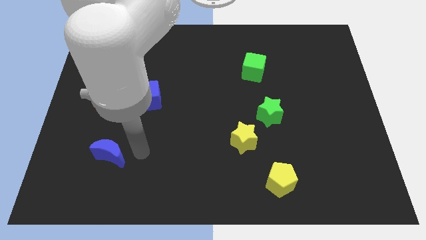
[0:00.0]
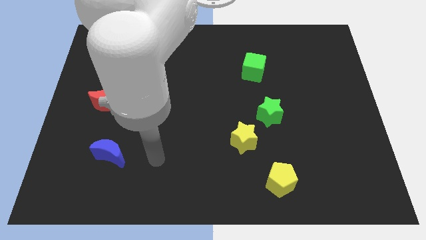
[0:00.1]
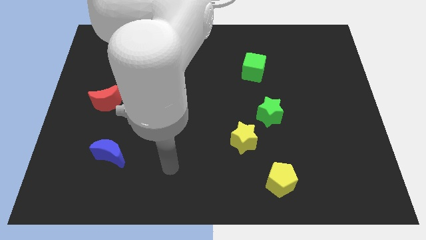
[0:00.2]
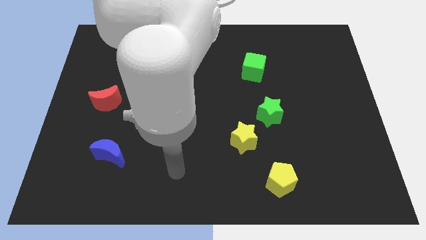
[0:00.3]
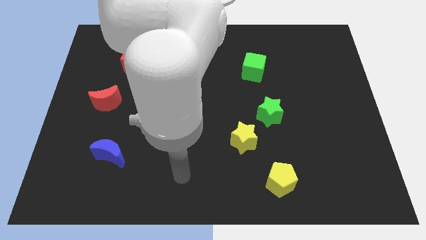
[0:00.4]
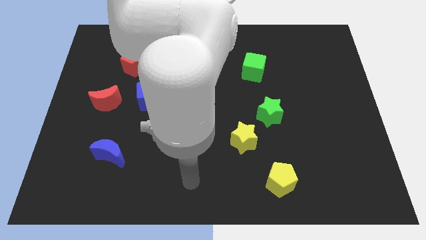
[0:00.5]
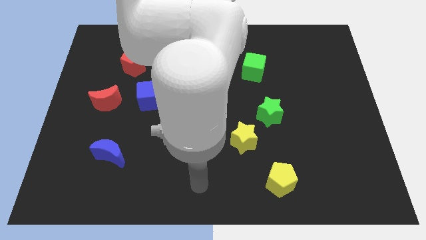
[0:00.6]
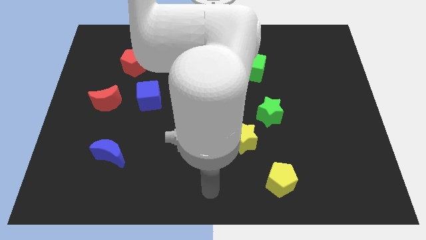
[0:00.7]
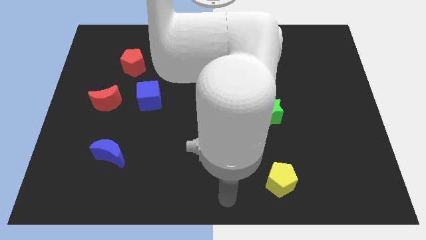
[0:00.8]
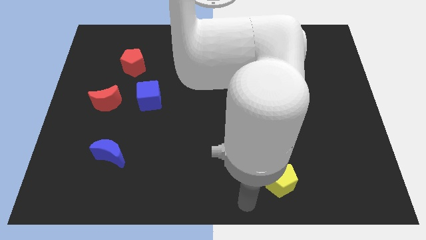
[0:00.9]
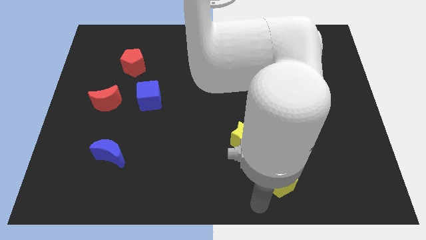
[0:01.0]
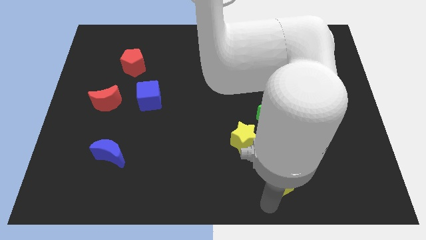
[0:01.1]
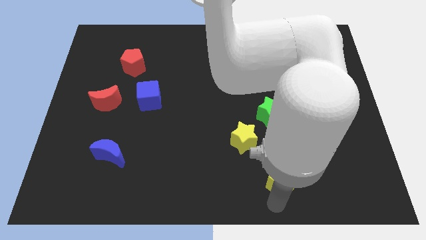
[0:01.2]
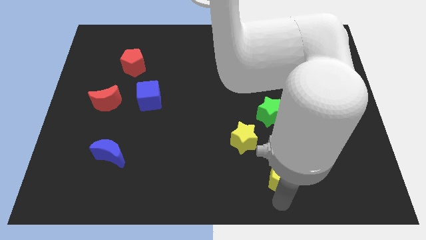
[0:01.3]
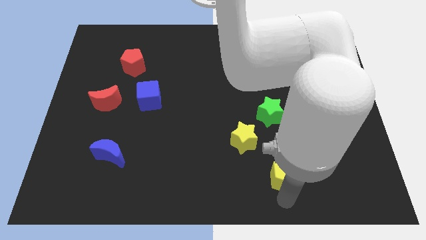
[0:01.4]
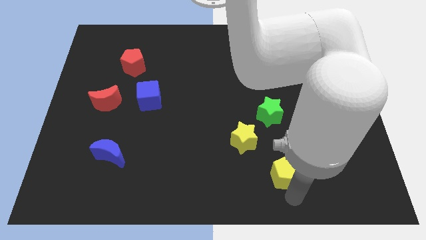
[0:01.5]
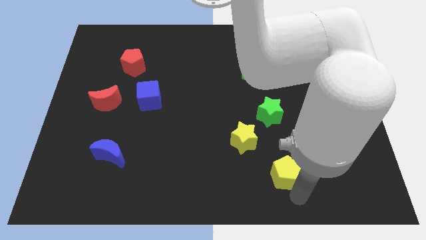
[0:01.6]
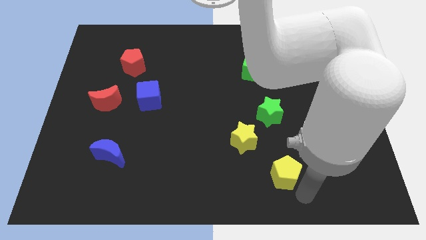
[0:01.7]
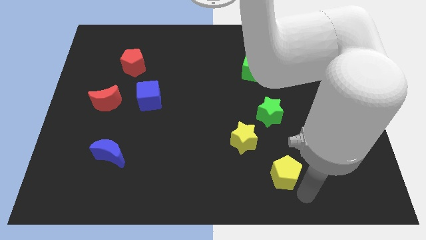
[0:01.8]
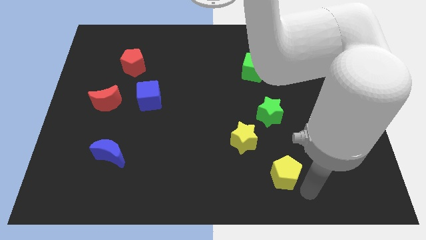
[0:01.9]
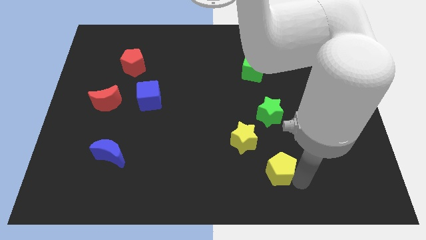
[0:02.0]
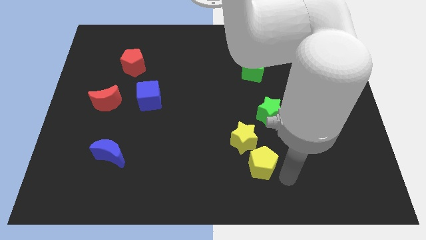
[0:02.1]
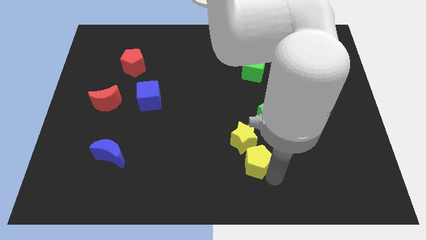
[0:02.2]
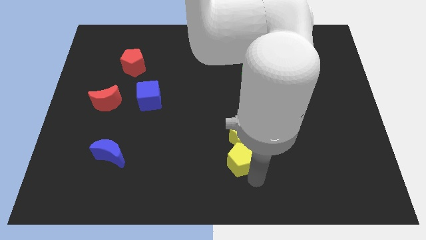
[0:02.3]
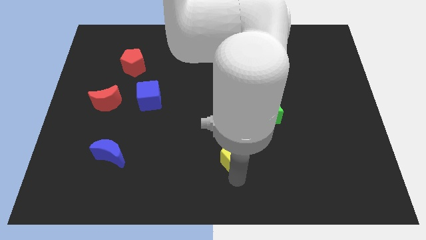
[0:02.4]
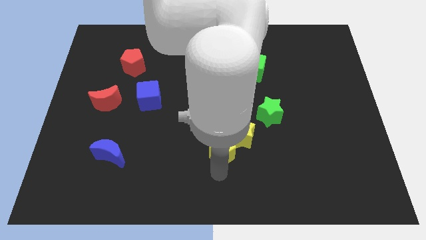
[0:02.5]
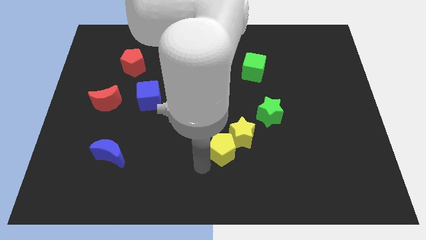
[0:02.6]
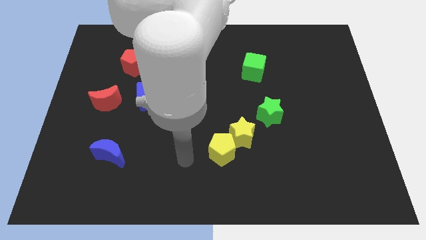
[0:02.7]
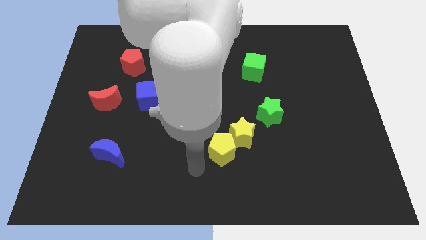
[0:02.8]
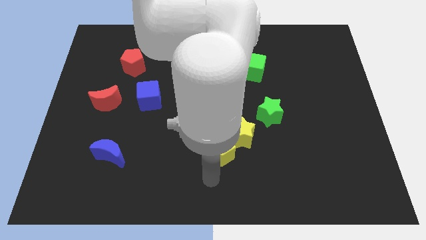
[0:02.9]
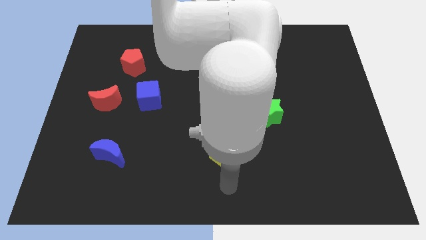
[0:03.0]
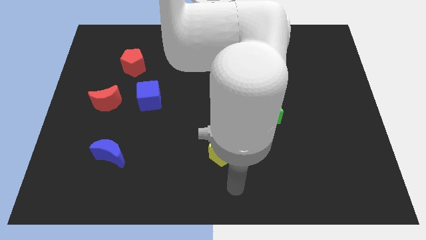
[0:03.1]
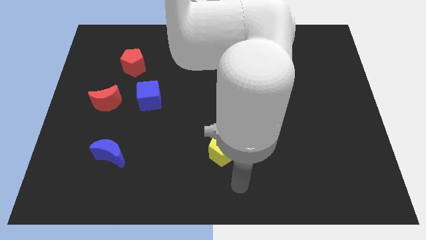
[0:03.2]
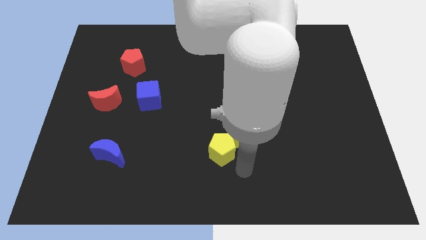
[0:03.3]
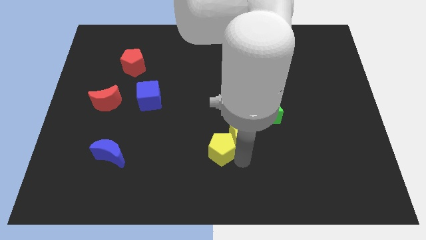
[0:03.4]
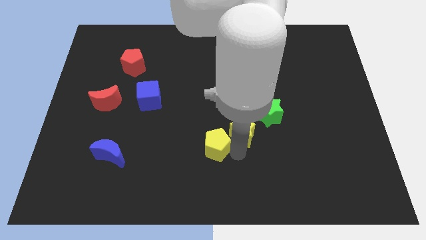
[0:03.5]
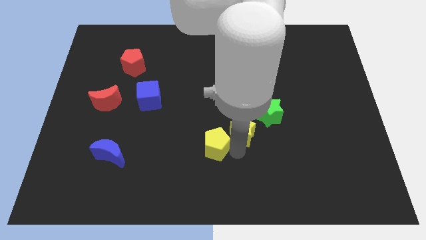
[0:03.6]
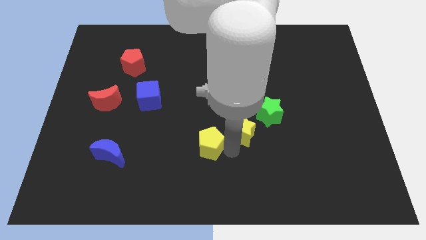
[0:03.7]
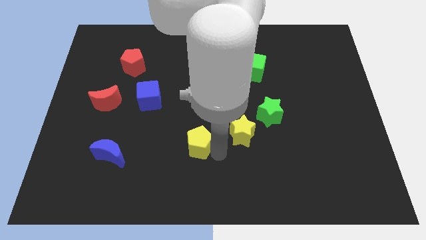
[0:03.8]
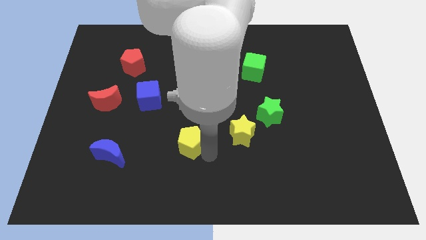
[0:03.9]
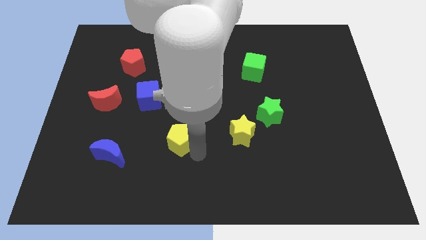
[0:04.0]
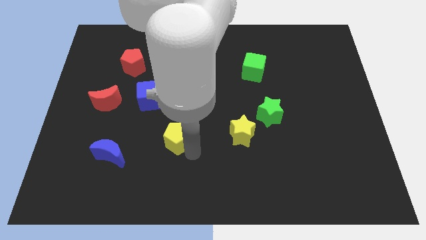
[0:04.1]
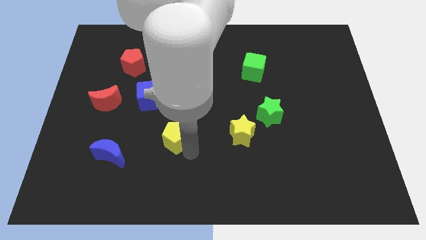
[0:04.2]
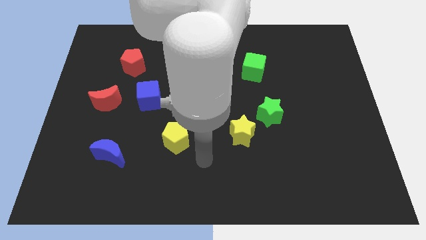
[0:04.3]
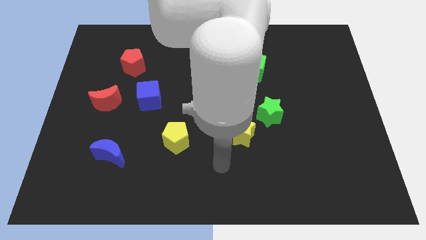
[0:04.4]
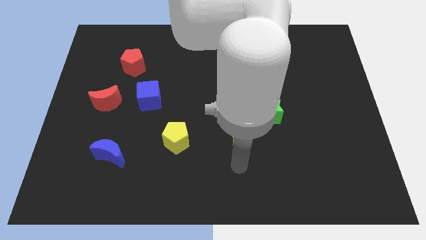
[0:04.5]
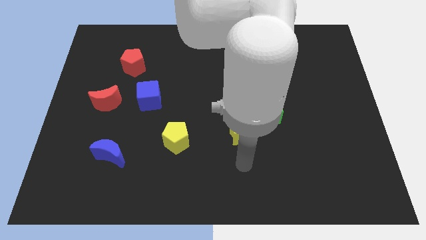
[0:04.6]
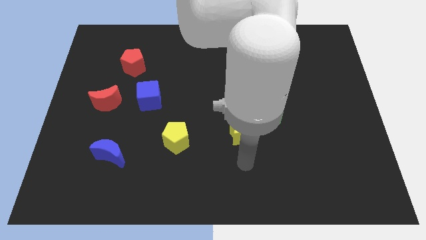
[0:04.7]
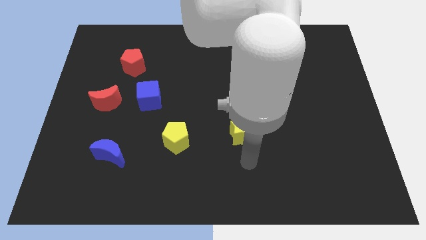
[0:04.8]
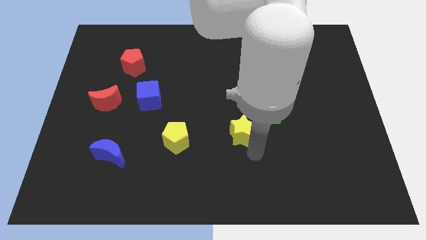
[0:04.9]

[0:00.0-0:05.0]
place the yellow pentagon to the left of the yellow star

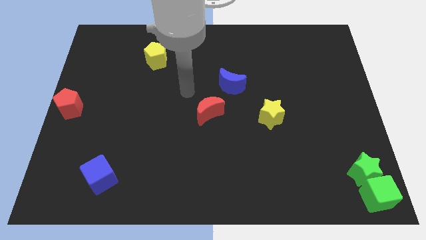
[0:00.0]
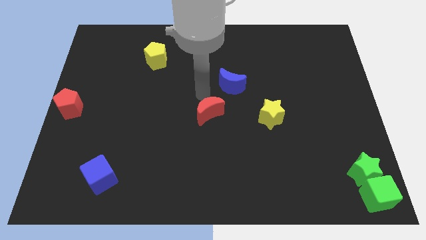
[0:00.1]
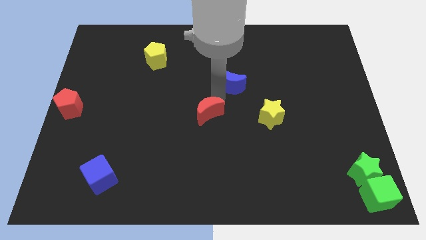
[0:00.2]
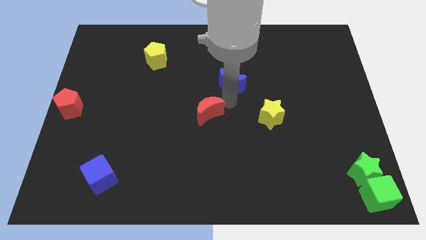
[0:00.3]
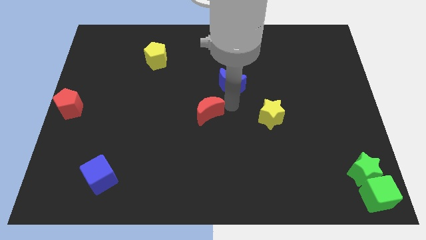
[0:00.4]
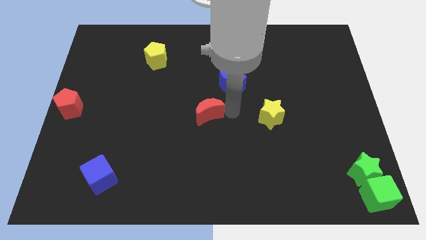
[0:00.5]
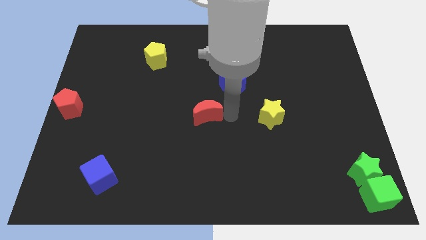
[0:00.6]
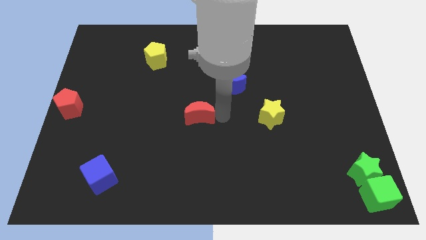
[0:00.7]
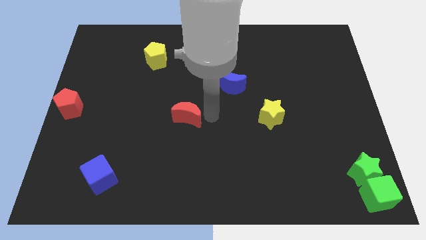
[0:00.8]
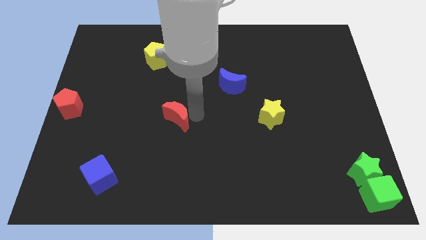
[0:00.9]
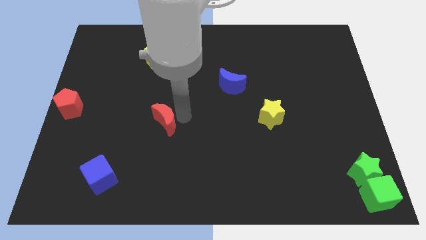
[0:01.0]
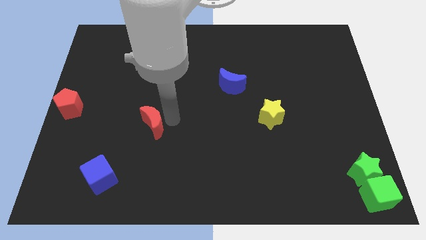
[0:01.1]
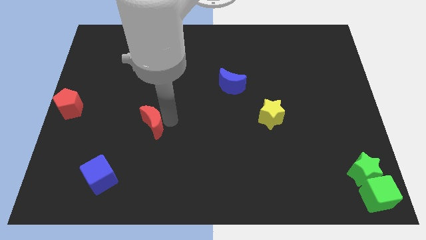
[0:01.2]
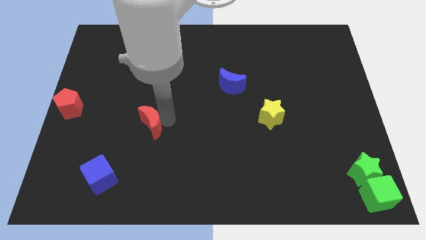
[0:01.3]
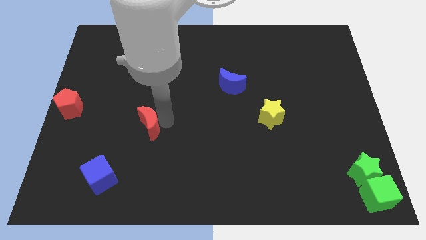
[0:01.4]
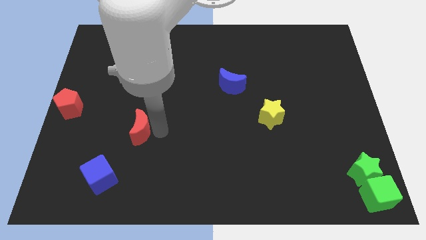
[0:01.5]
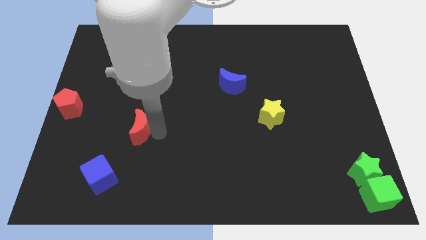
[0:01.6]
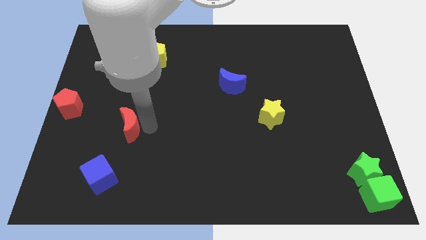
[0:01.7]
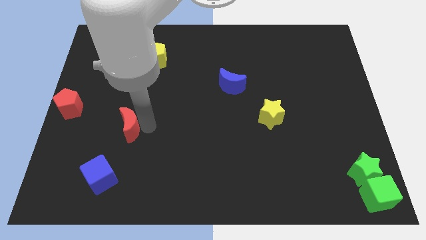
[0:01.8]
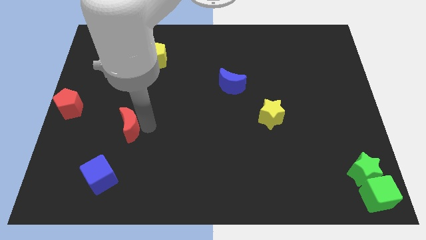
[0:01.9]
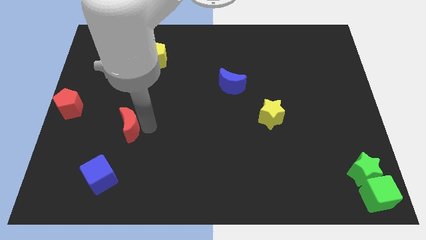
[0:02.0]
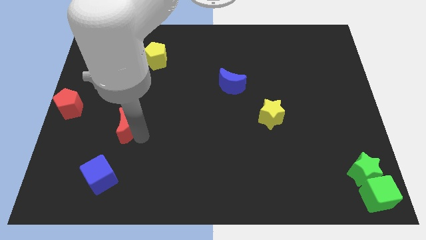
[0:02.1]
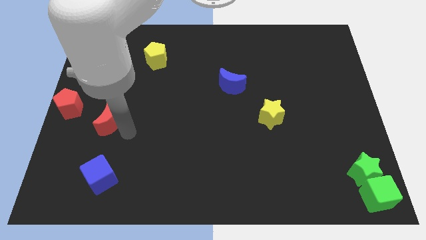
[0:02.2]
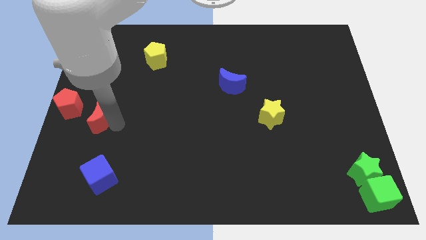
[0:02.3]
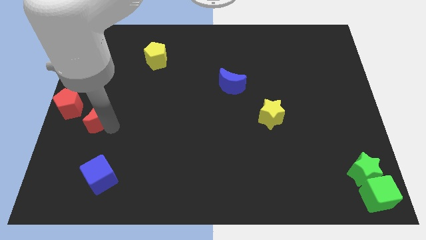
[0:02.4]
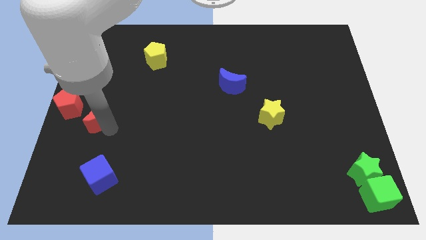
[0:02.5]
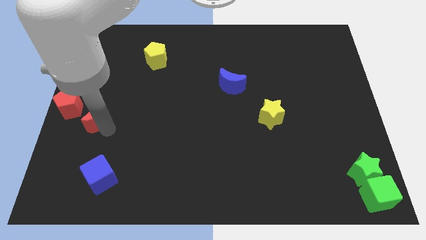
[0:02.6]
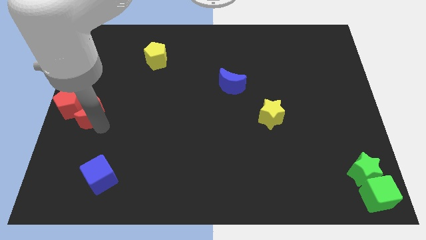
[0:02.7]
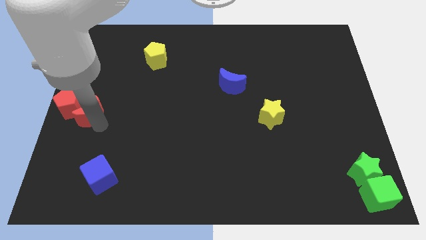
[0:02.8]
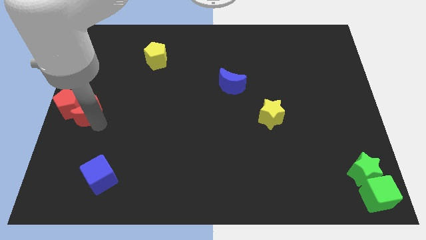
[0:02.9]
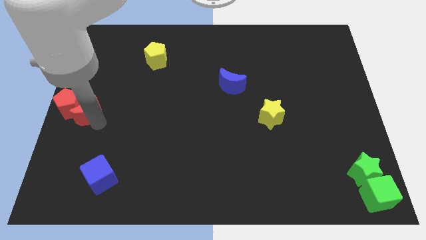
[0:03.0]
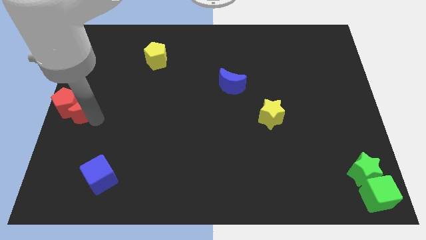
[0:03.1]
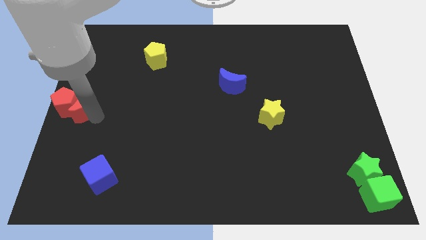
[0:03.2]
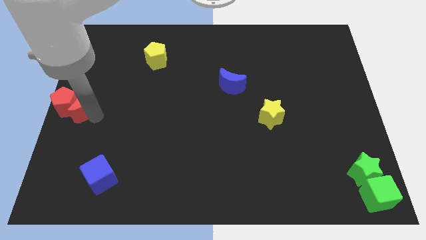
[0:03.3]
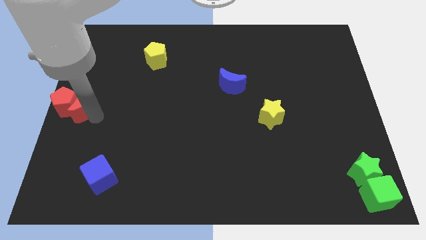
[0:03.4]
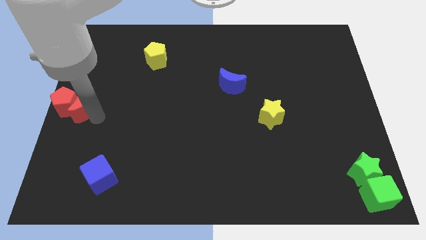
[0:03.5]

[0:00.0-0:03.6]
push the red moon right to the red pentagon

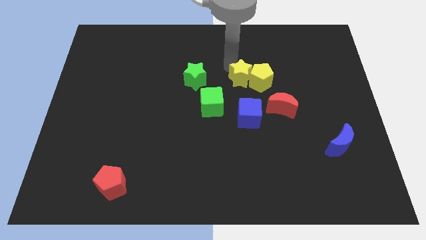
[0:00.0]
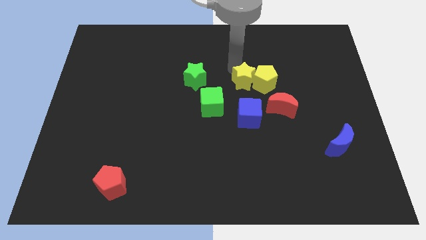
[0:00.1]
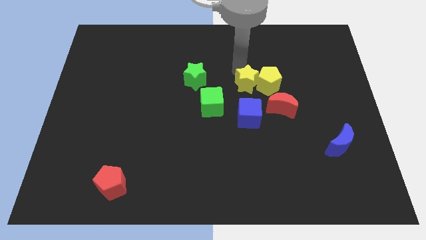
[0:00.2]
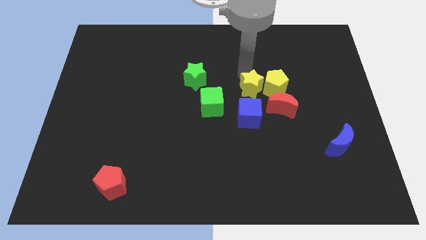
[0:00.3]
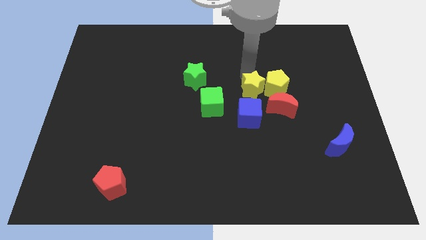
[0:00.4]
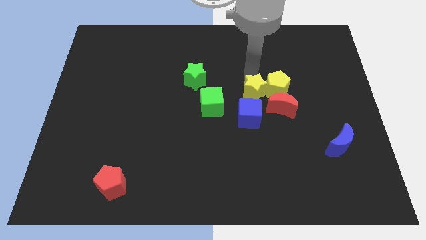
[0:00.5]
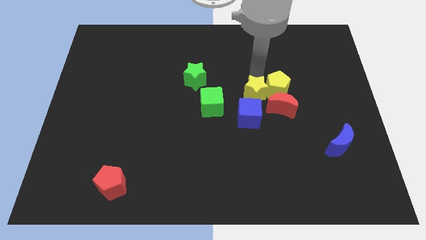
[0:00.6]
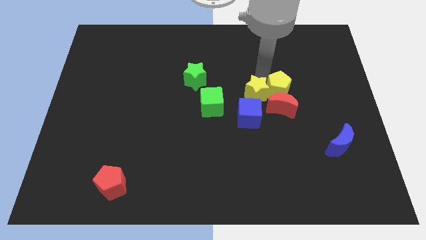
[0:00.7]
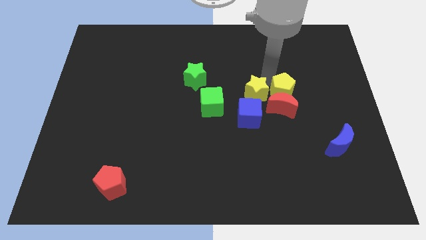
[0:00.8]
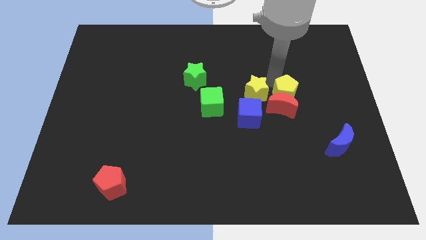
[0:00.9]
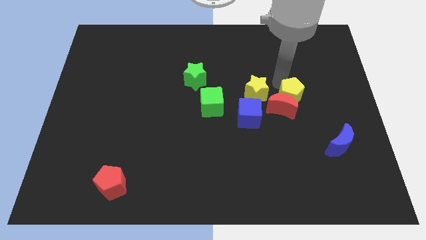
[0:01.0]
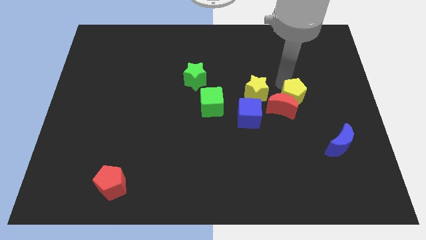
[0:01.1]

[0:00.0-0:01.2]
slide yellow blocks into red moon
